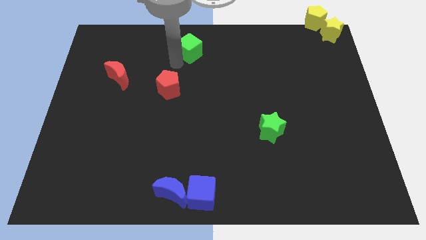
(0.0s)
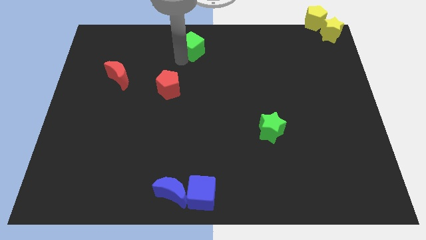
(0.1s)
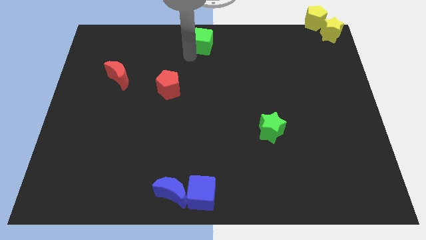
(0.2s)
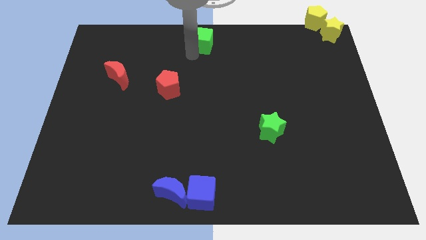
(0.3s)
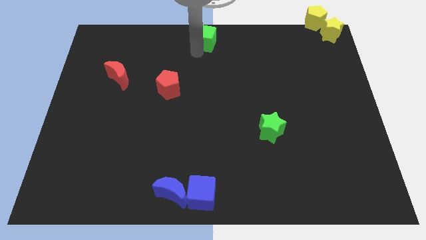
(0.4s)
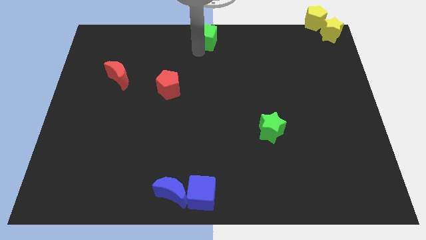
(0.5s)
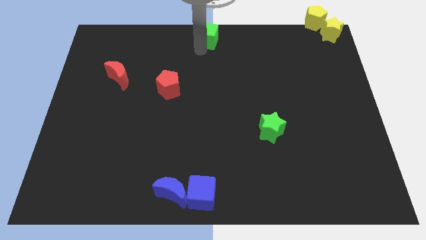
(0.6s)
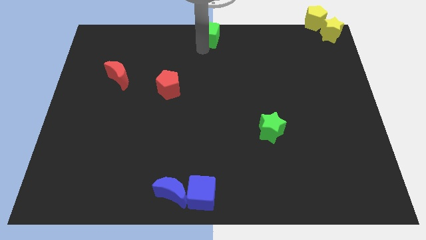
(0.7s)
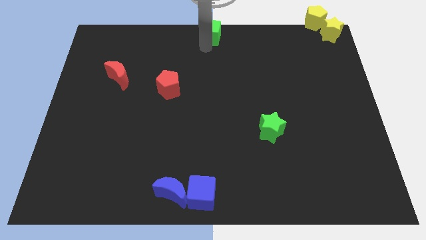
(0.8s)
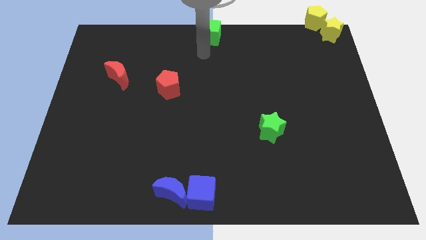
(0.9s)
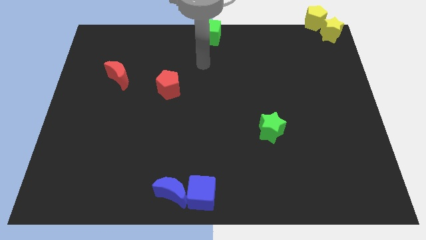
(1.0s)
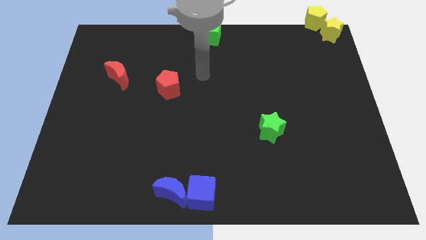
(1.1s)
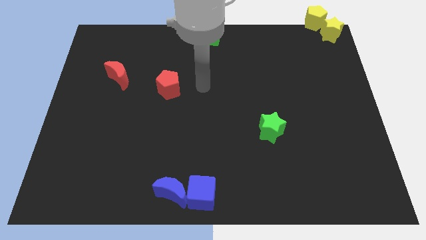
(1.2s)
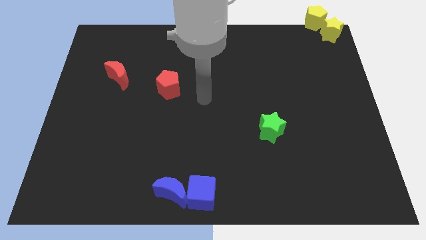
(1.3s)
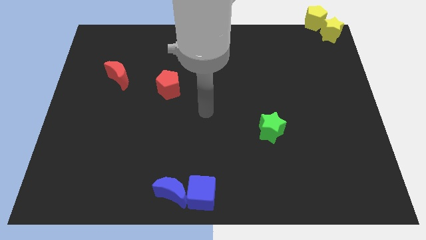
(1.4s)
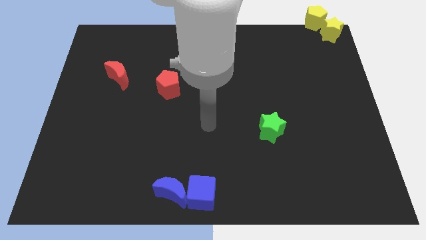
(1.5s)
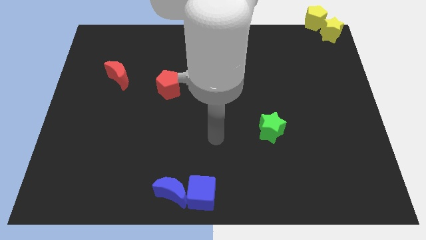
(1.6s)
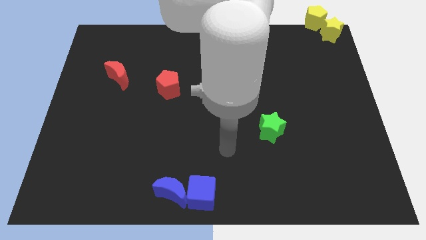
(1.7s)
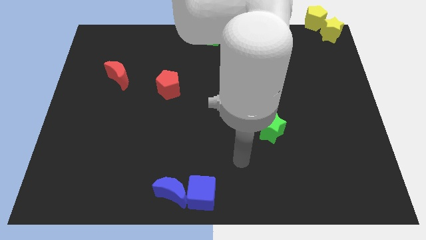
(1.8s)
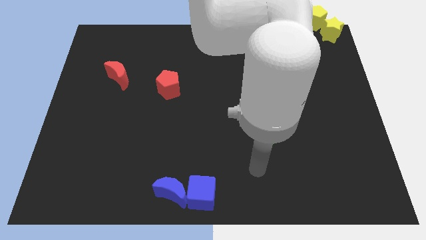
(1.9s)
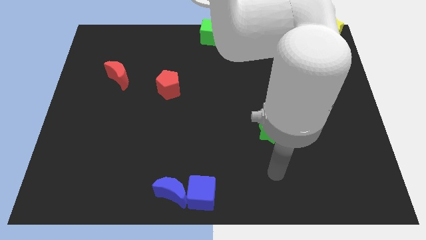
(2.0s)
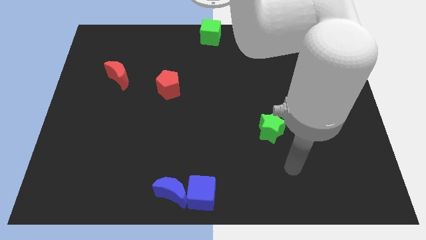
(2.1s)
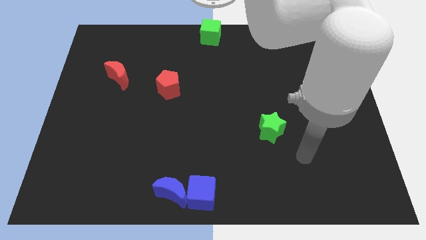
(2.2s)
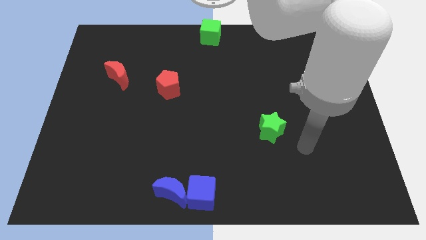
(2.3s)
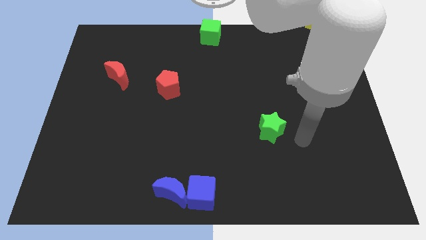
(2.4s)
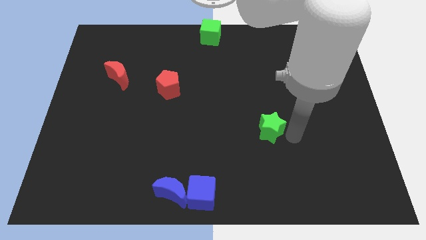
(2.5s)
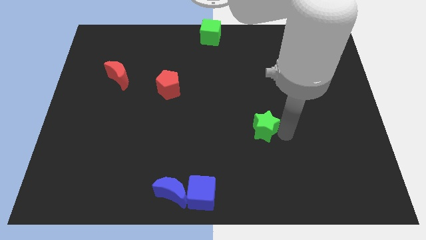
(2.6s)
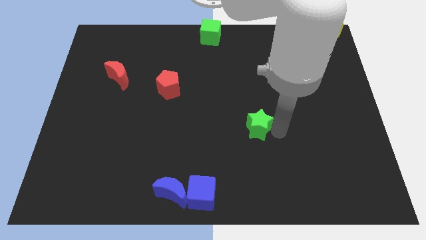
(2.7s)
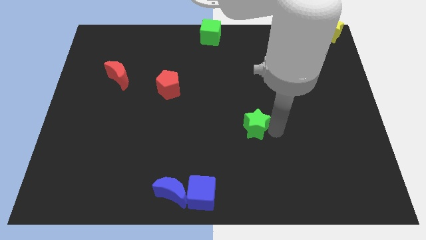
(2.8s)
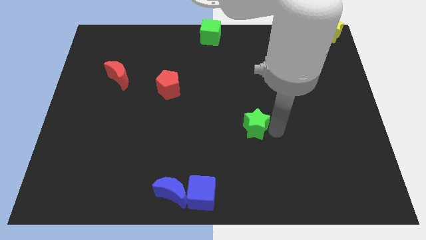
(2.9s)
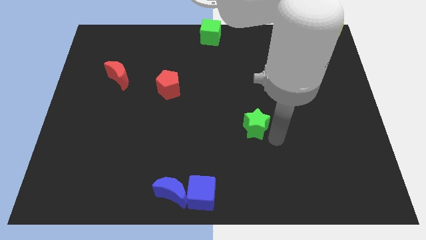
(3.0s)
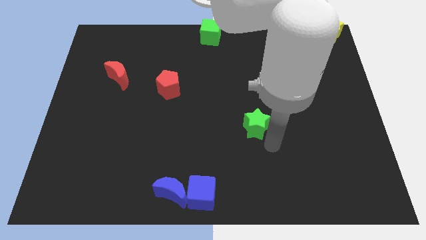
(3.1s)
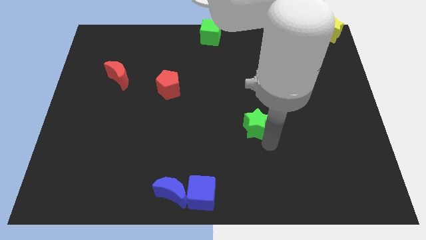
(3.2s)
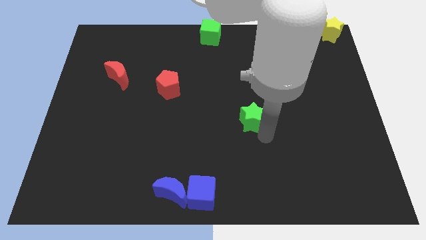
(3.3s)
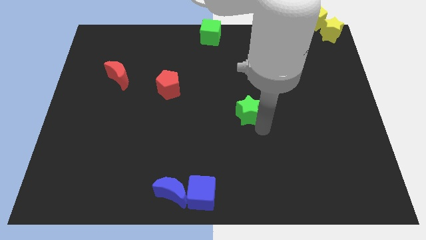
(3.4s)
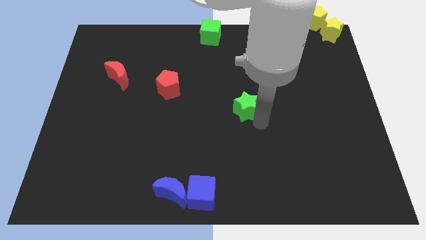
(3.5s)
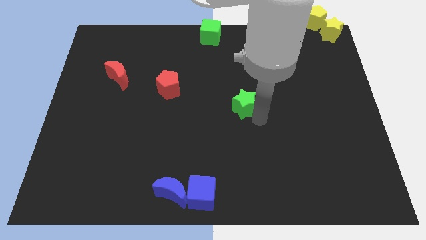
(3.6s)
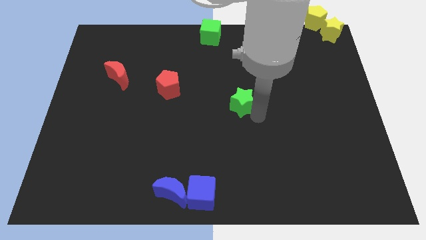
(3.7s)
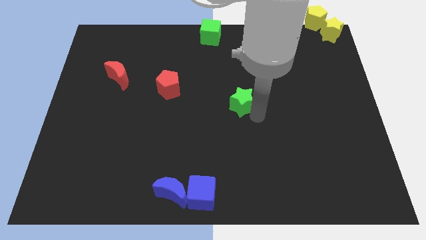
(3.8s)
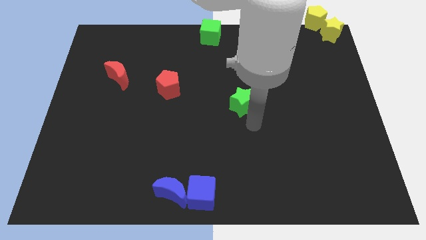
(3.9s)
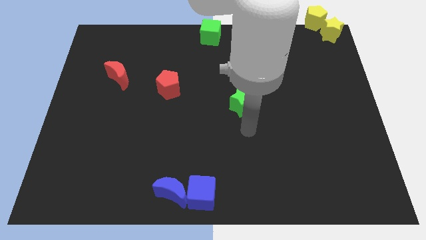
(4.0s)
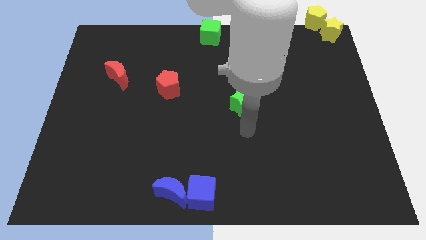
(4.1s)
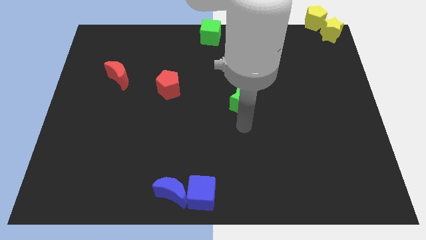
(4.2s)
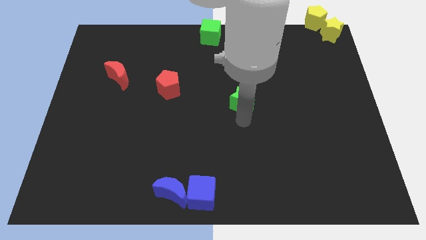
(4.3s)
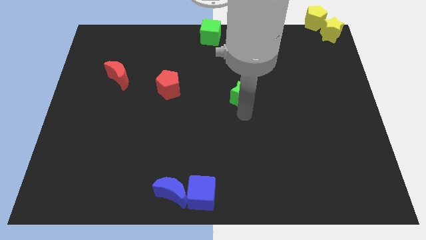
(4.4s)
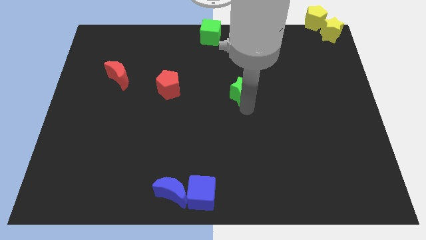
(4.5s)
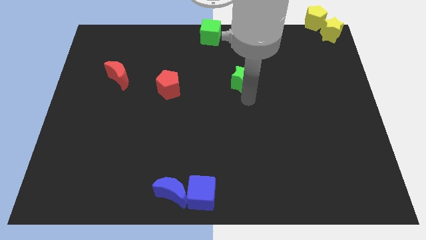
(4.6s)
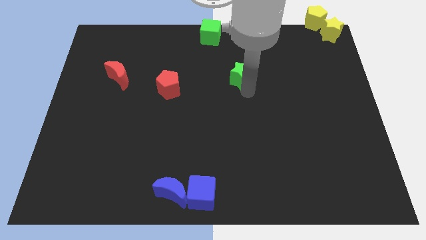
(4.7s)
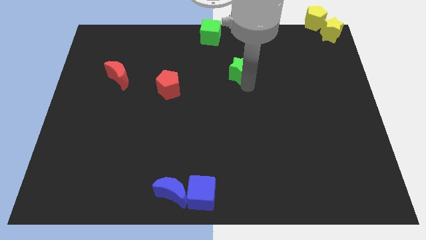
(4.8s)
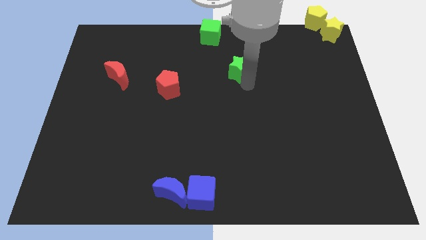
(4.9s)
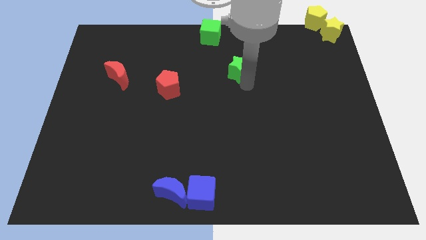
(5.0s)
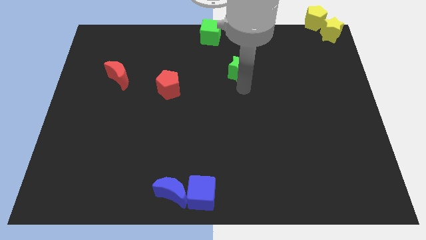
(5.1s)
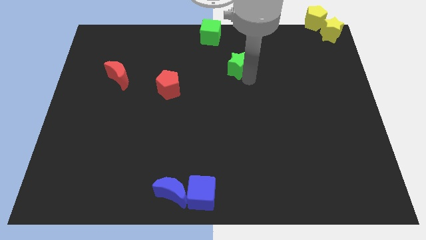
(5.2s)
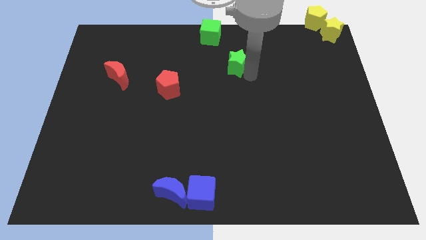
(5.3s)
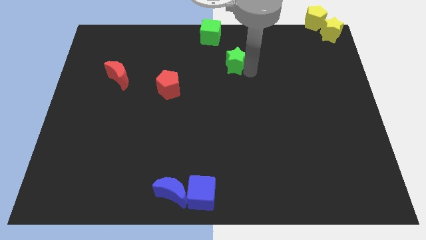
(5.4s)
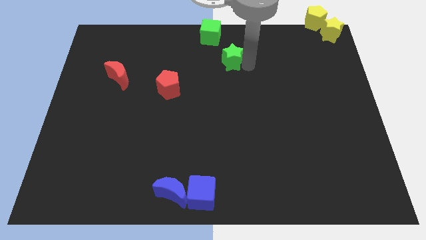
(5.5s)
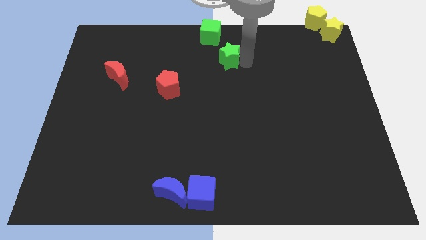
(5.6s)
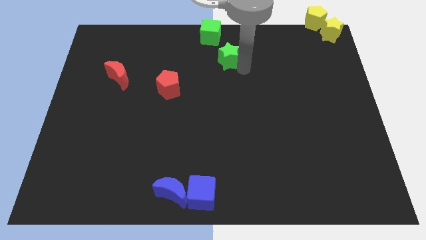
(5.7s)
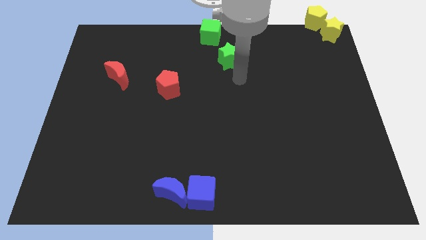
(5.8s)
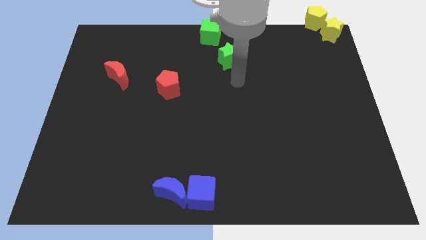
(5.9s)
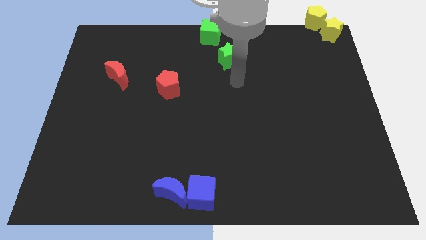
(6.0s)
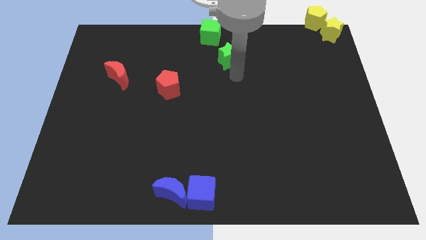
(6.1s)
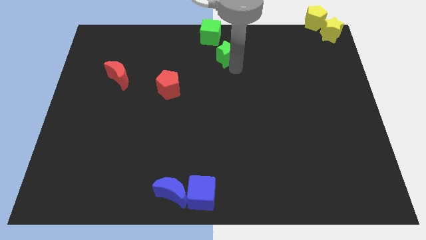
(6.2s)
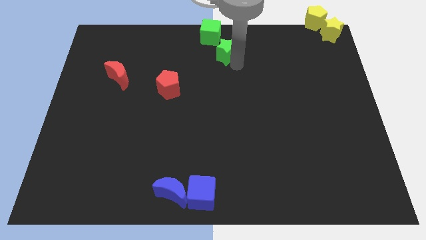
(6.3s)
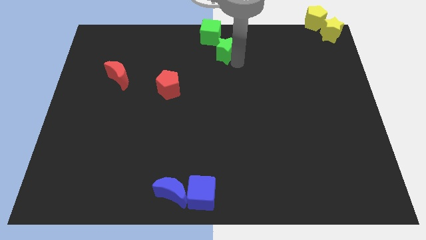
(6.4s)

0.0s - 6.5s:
place green star below green cube

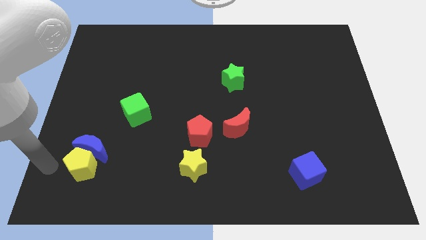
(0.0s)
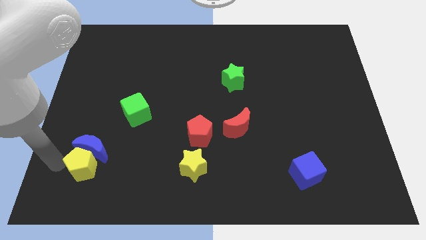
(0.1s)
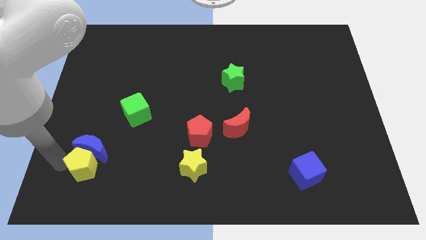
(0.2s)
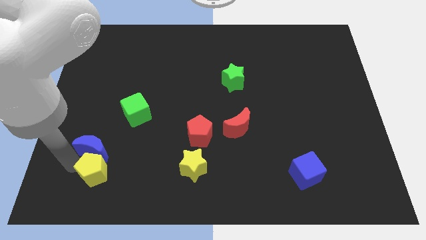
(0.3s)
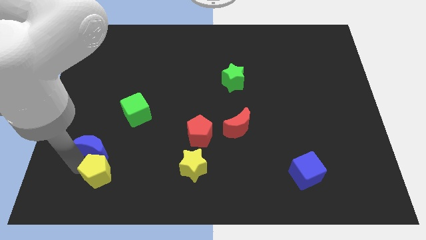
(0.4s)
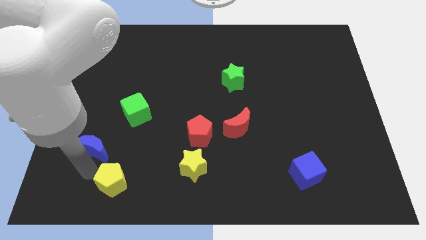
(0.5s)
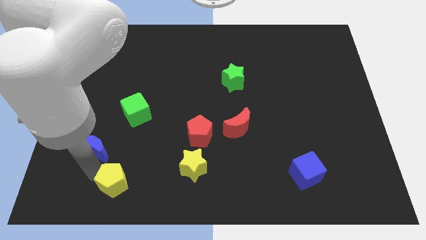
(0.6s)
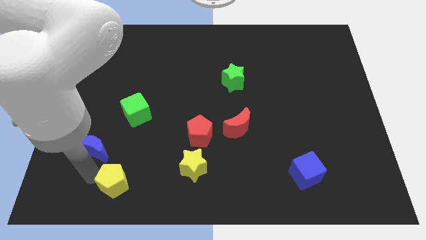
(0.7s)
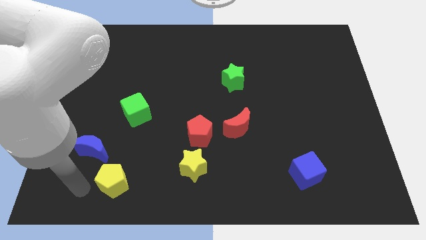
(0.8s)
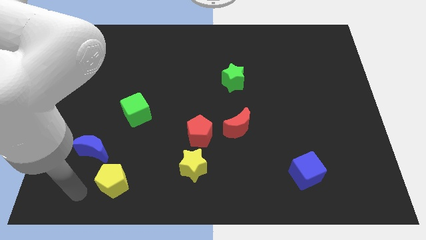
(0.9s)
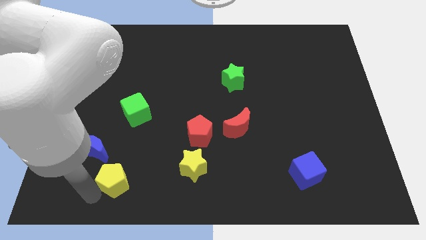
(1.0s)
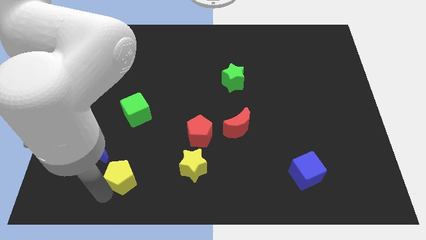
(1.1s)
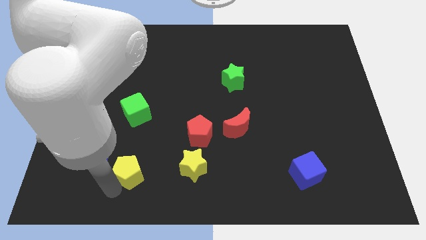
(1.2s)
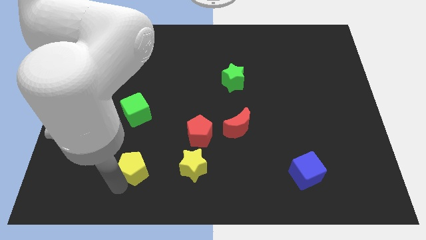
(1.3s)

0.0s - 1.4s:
separate the yellow pentagon from the blue moon

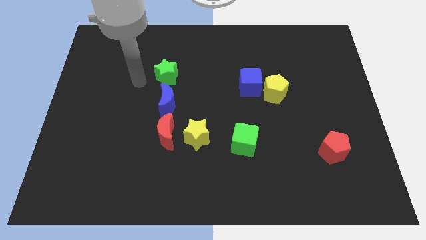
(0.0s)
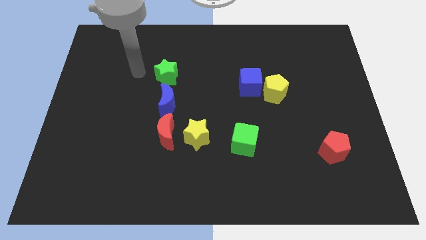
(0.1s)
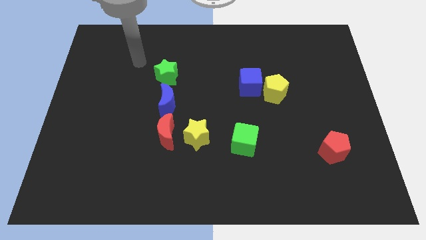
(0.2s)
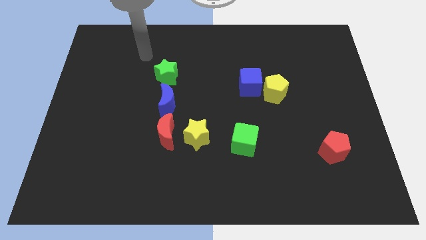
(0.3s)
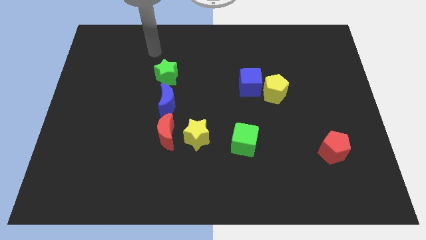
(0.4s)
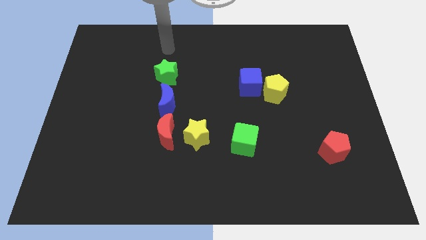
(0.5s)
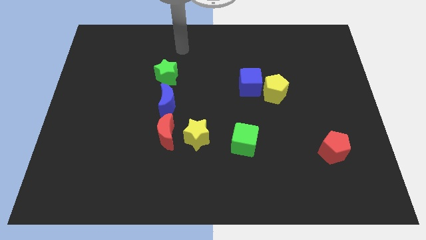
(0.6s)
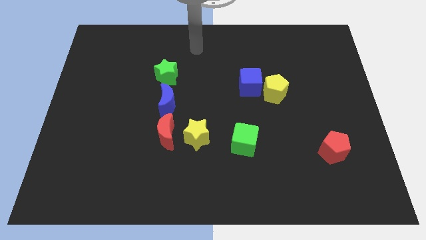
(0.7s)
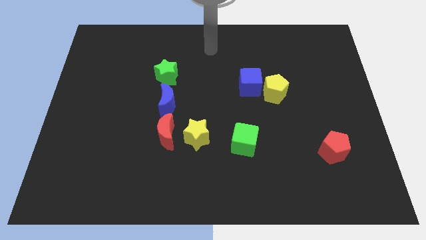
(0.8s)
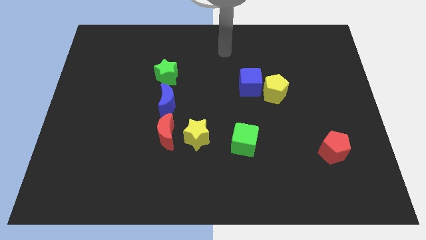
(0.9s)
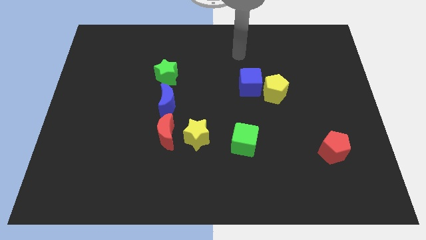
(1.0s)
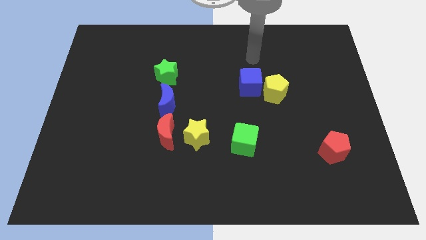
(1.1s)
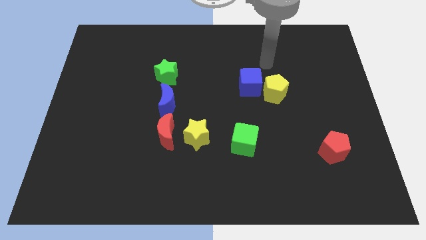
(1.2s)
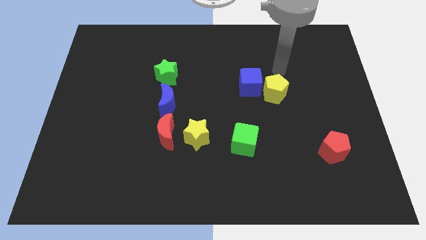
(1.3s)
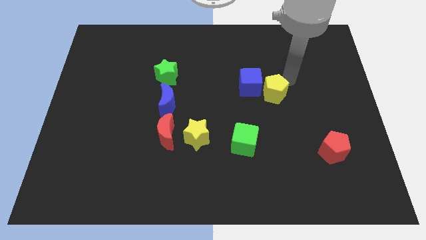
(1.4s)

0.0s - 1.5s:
move your arm towards the yellow pentago
